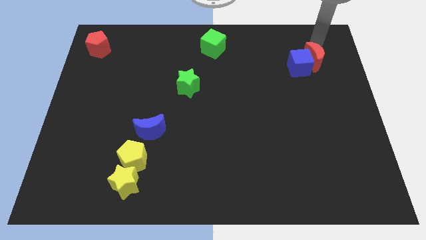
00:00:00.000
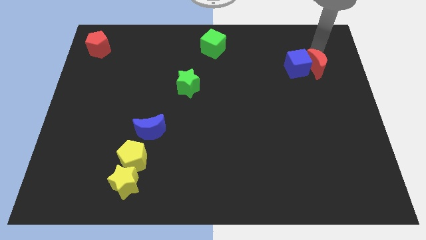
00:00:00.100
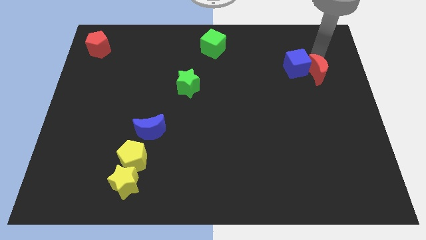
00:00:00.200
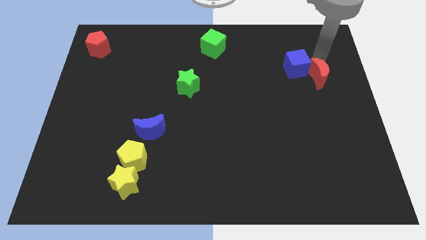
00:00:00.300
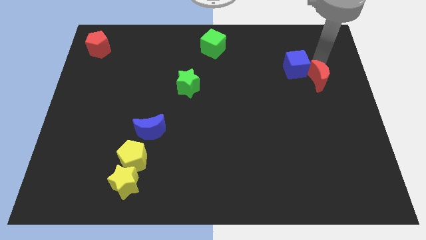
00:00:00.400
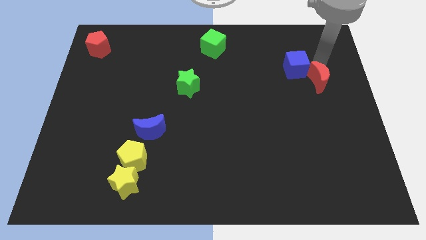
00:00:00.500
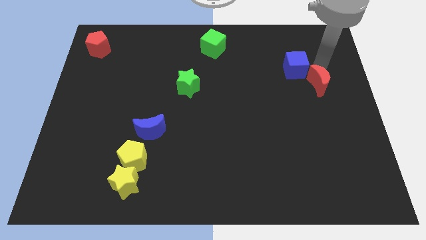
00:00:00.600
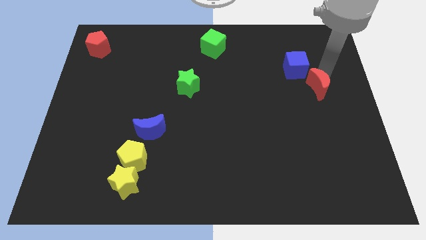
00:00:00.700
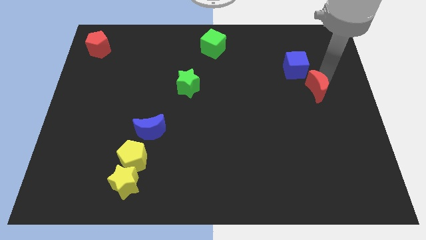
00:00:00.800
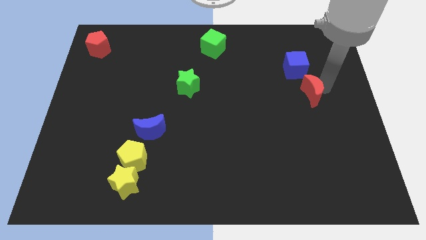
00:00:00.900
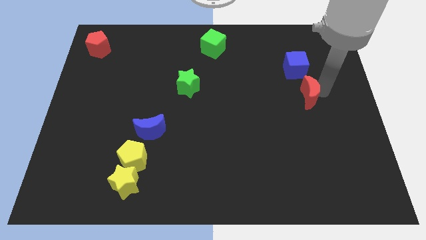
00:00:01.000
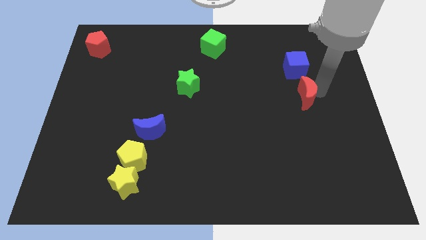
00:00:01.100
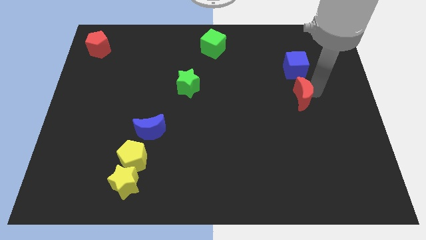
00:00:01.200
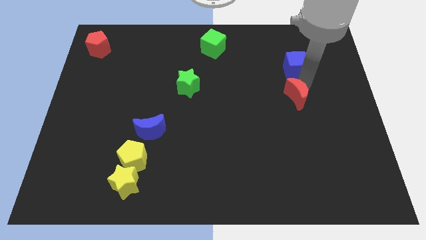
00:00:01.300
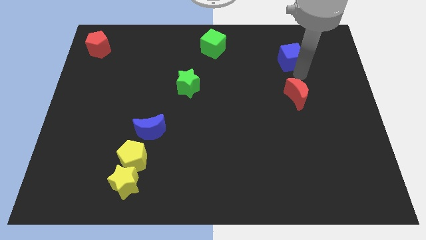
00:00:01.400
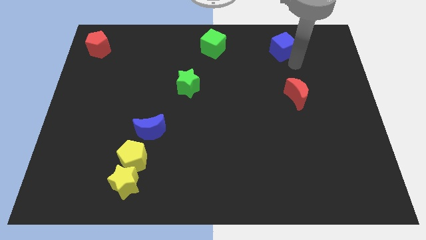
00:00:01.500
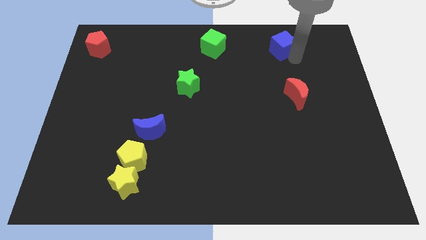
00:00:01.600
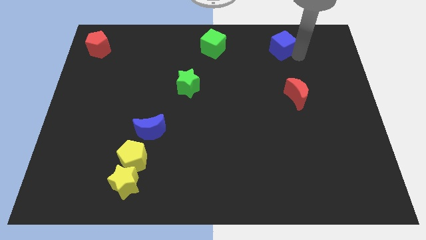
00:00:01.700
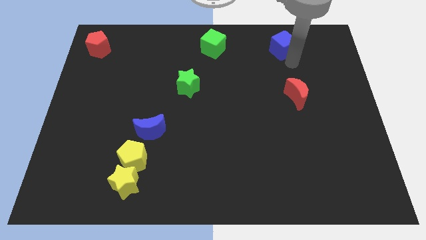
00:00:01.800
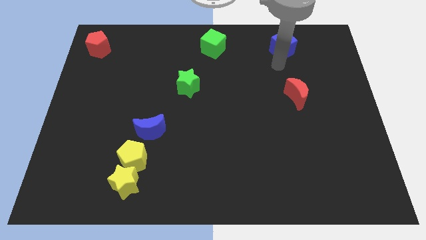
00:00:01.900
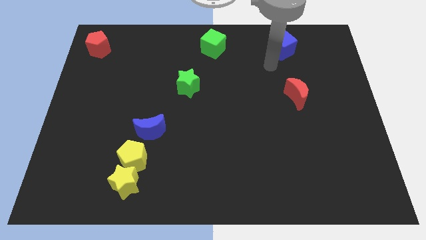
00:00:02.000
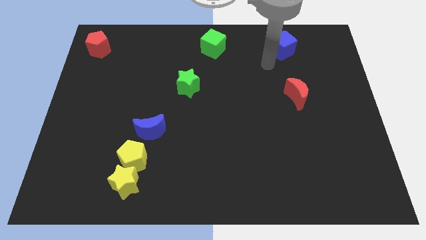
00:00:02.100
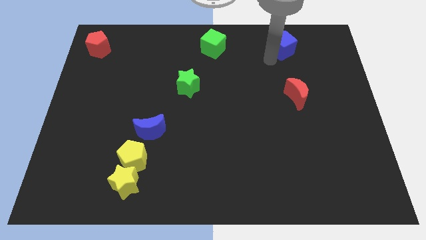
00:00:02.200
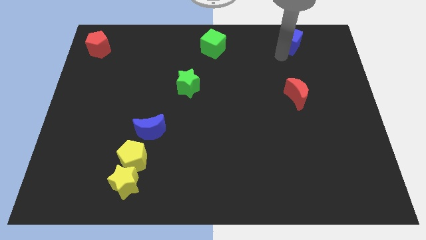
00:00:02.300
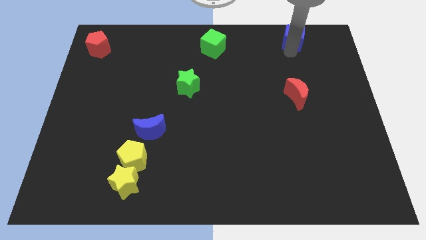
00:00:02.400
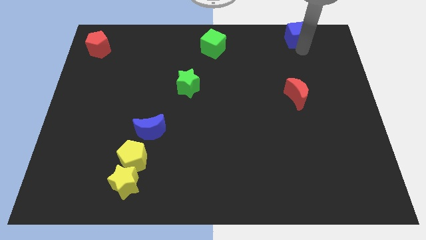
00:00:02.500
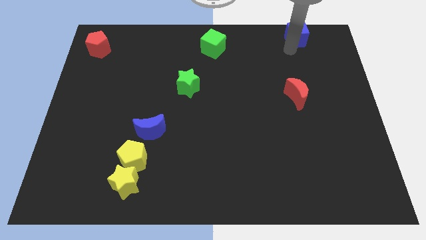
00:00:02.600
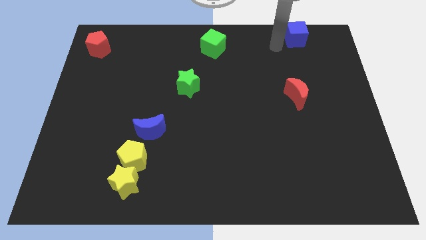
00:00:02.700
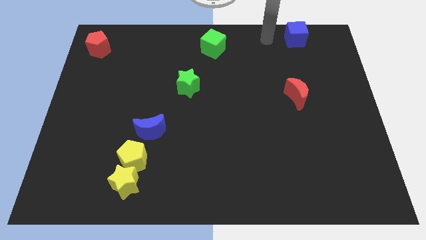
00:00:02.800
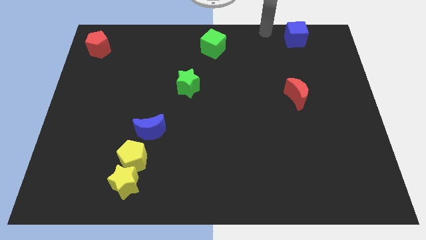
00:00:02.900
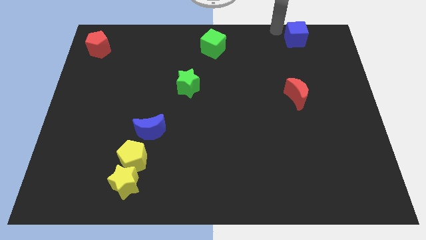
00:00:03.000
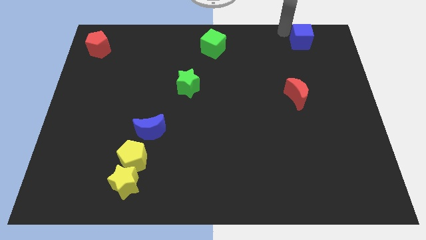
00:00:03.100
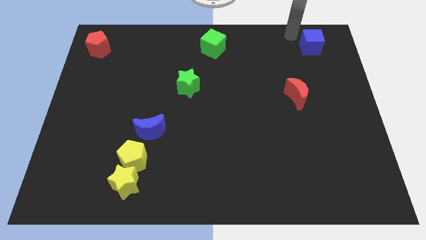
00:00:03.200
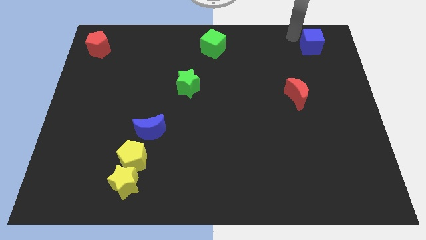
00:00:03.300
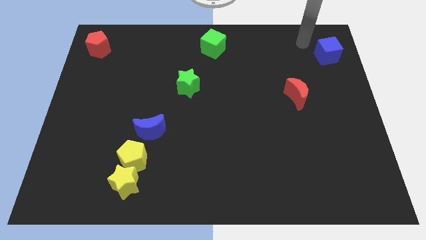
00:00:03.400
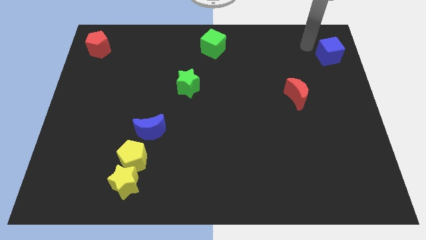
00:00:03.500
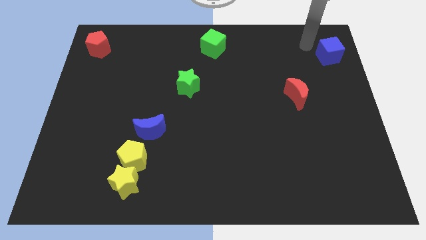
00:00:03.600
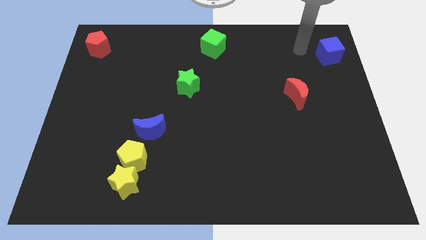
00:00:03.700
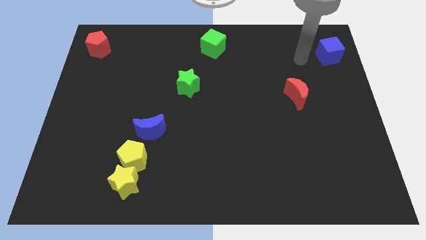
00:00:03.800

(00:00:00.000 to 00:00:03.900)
separate red moon and the blue cube

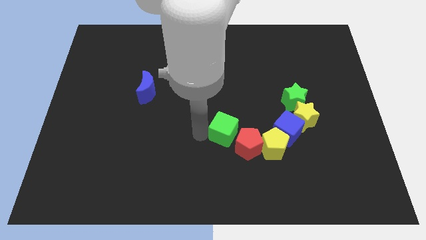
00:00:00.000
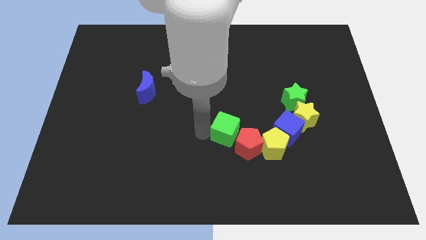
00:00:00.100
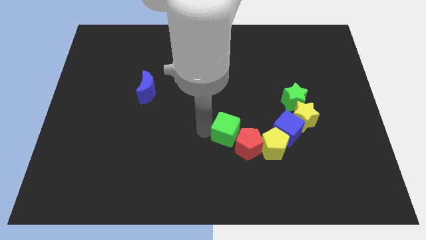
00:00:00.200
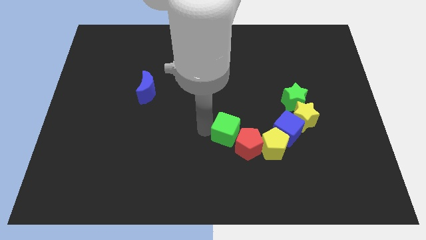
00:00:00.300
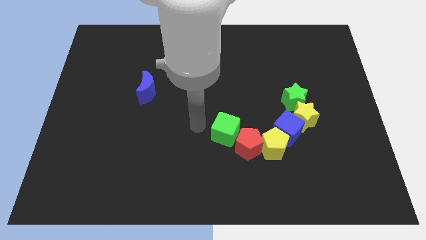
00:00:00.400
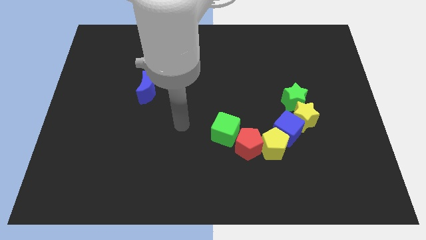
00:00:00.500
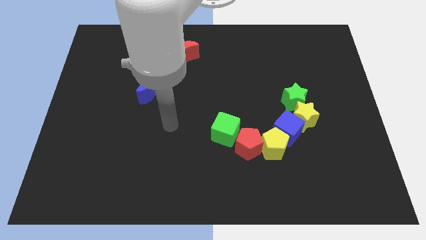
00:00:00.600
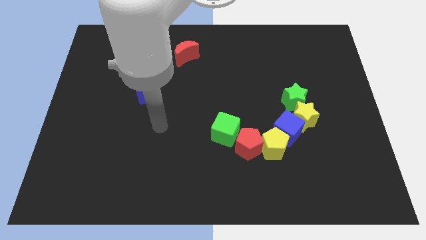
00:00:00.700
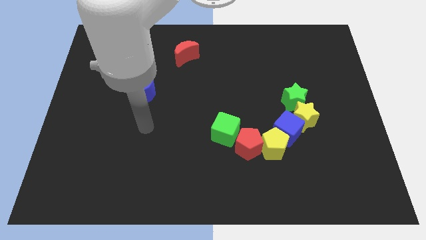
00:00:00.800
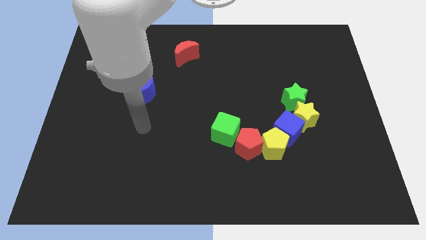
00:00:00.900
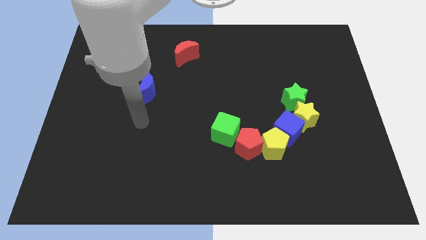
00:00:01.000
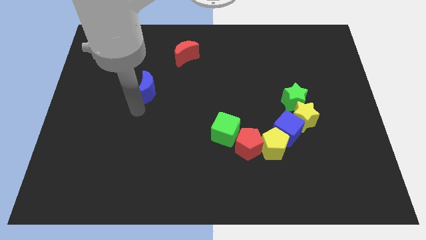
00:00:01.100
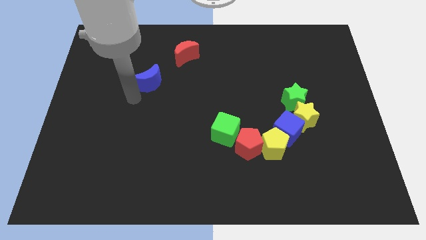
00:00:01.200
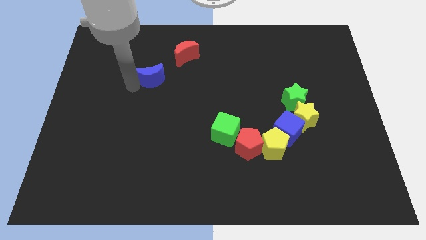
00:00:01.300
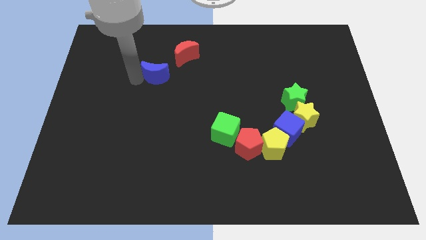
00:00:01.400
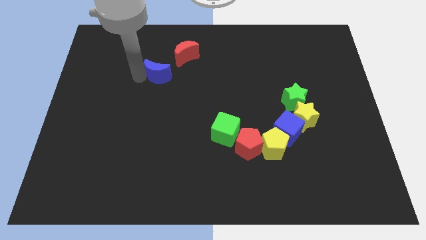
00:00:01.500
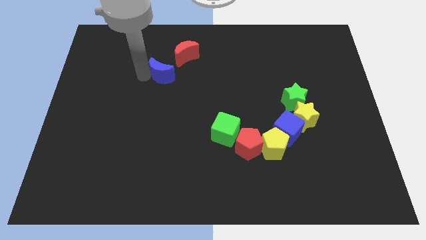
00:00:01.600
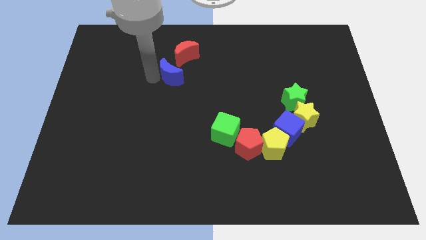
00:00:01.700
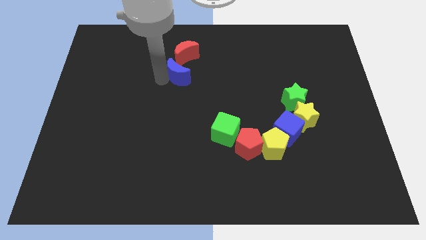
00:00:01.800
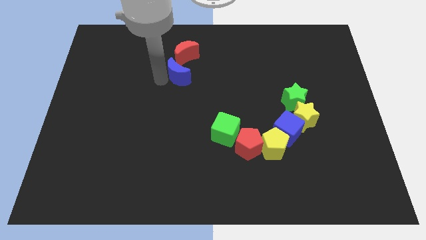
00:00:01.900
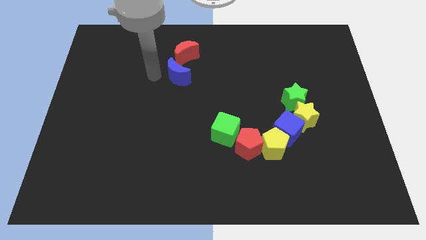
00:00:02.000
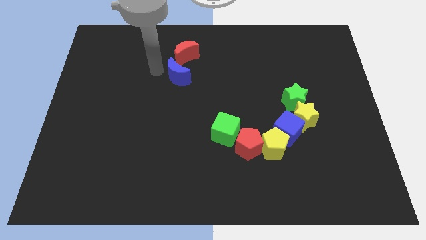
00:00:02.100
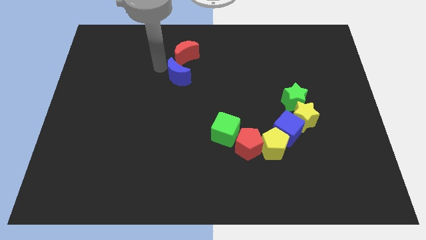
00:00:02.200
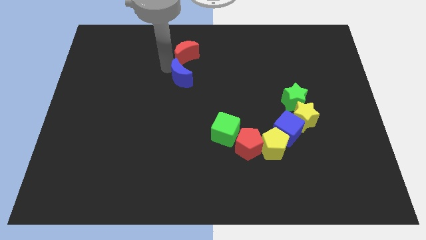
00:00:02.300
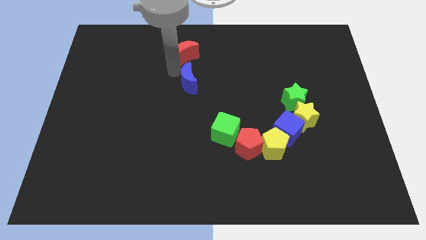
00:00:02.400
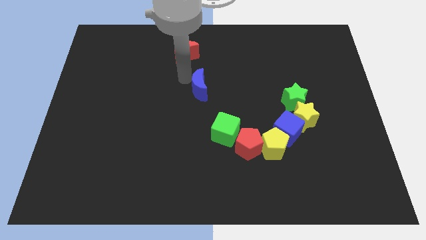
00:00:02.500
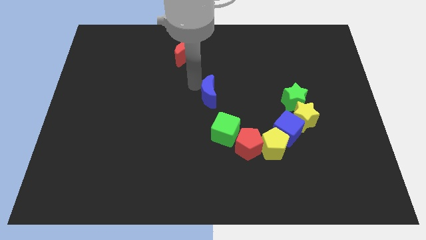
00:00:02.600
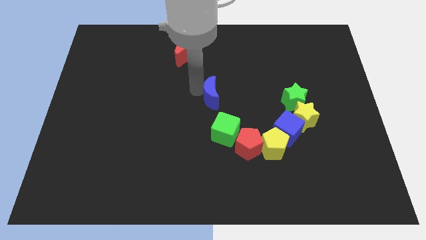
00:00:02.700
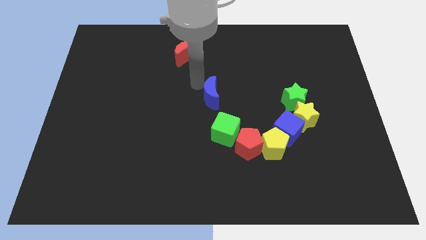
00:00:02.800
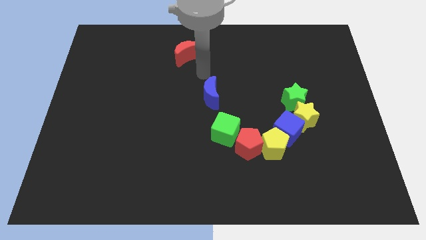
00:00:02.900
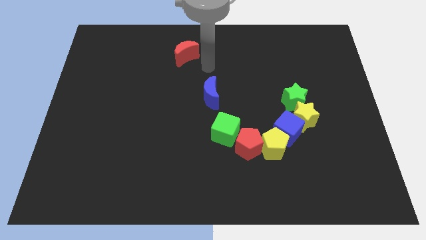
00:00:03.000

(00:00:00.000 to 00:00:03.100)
move the blue moon above the green cube

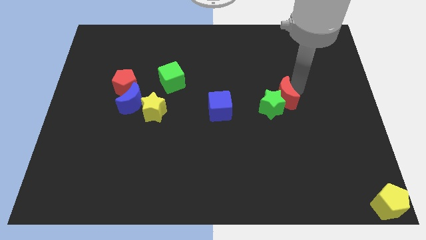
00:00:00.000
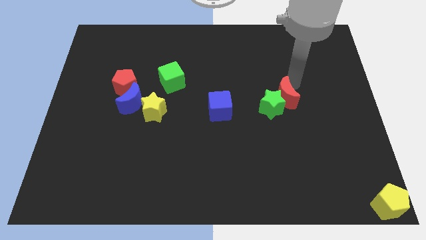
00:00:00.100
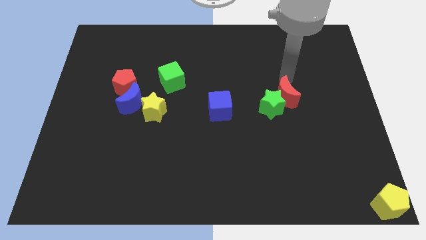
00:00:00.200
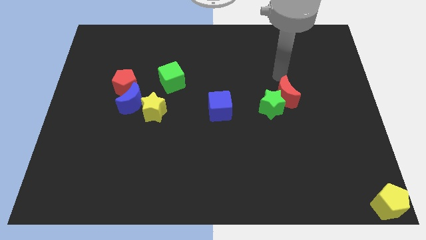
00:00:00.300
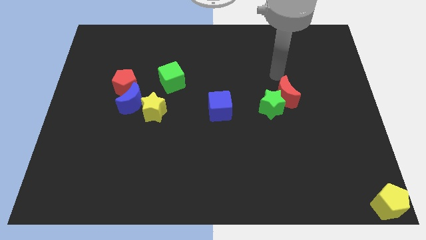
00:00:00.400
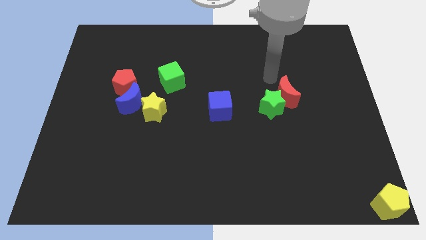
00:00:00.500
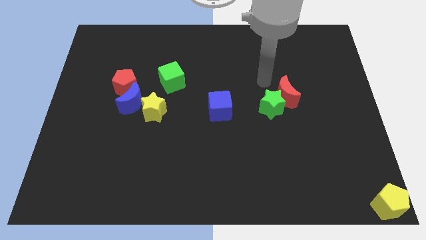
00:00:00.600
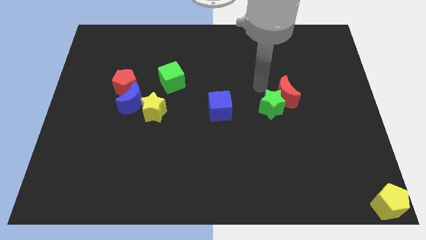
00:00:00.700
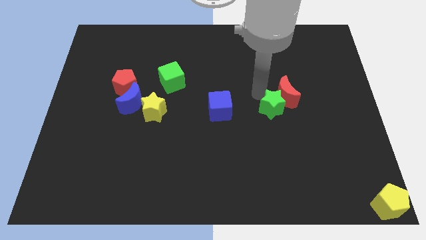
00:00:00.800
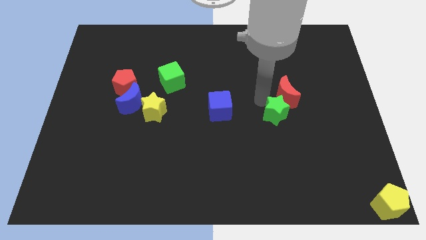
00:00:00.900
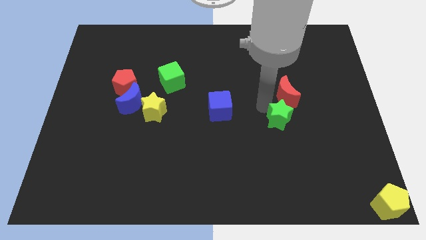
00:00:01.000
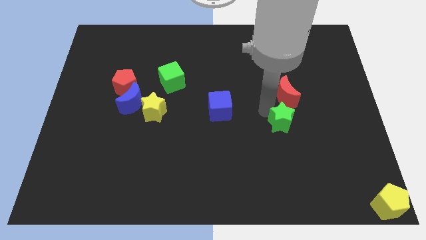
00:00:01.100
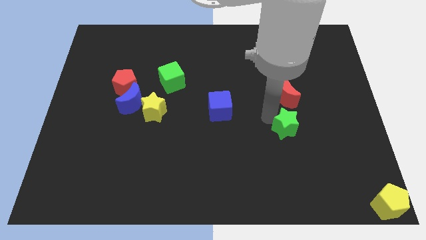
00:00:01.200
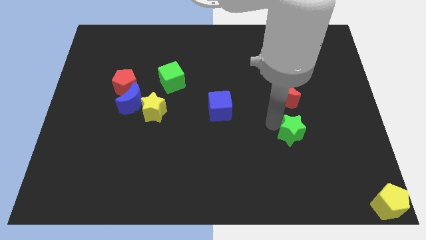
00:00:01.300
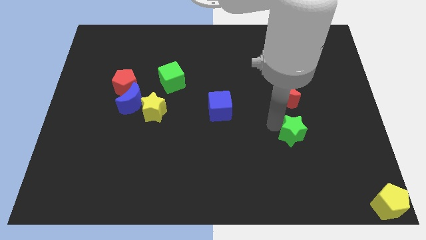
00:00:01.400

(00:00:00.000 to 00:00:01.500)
place green star to the bottom of red moon

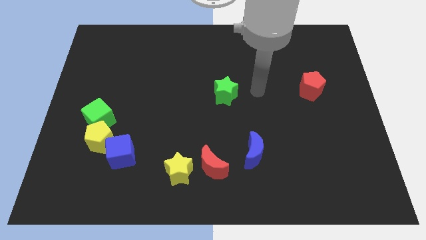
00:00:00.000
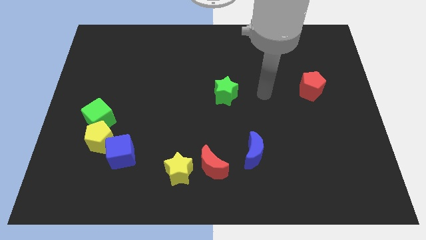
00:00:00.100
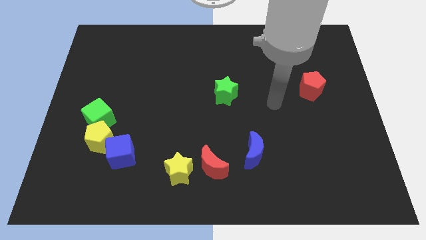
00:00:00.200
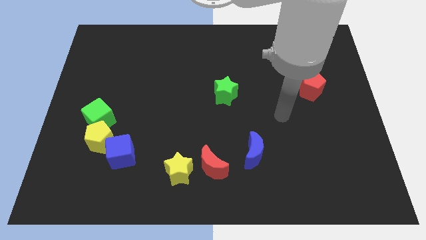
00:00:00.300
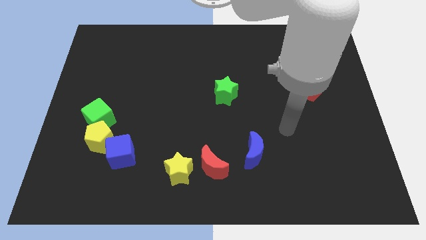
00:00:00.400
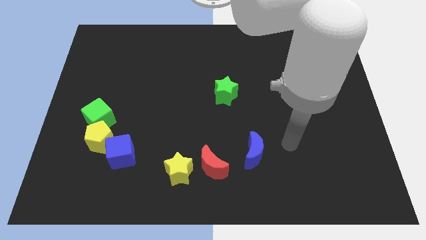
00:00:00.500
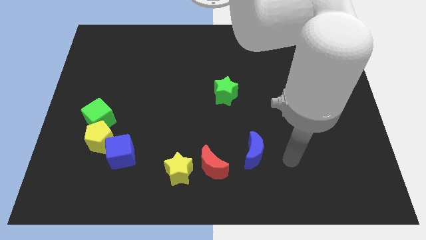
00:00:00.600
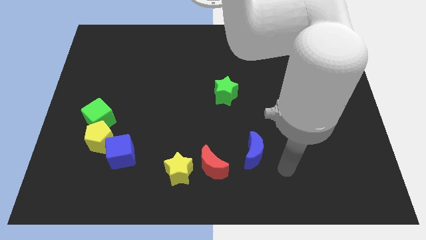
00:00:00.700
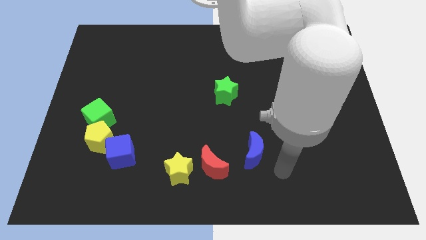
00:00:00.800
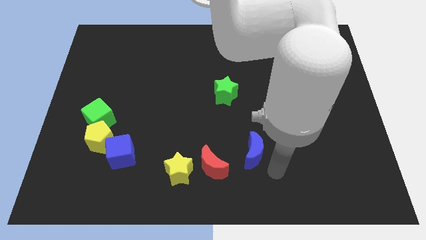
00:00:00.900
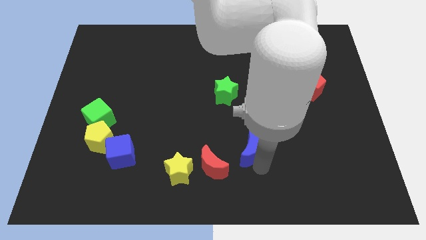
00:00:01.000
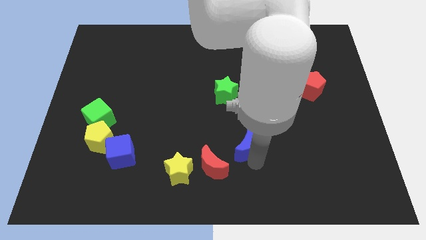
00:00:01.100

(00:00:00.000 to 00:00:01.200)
move your arm towards the blue crescent
